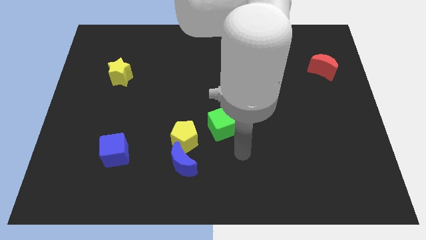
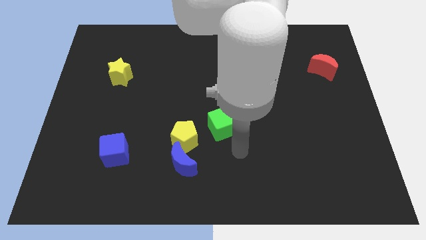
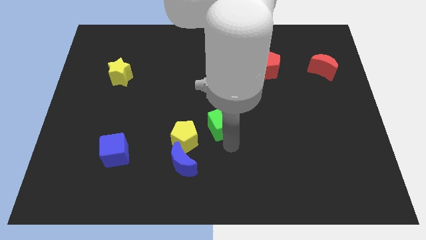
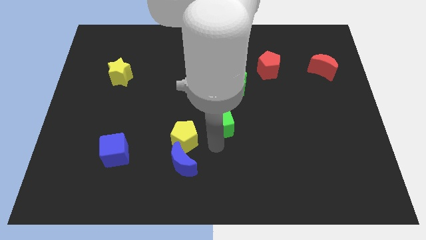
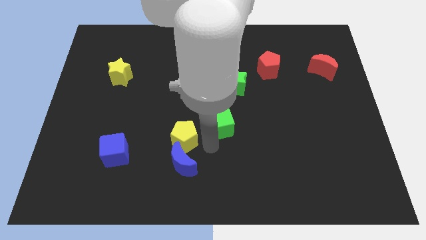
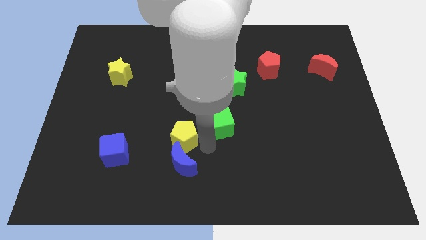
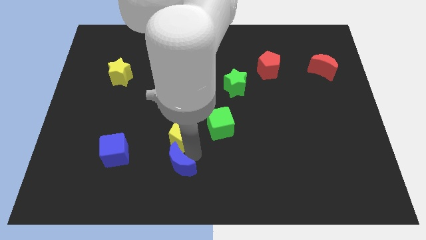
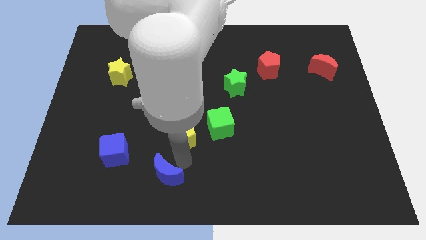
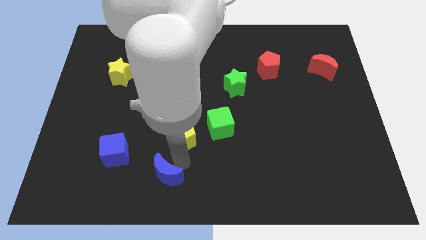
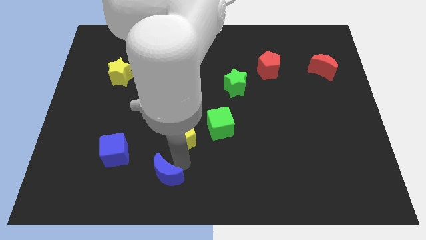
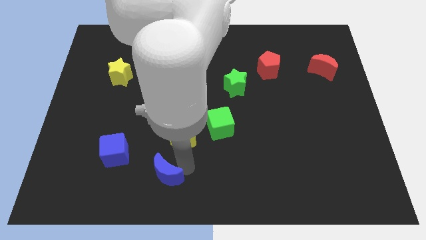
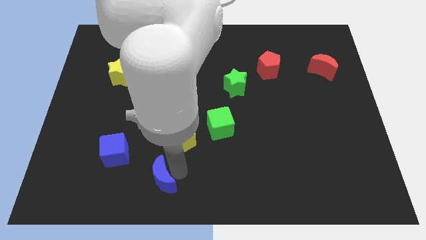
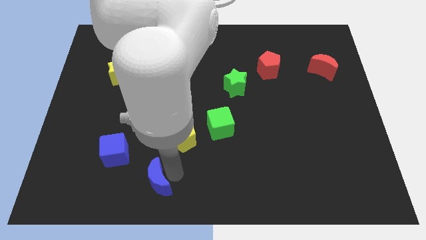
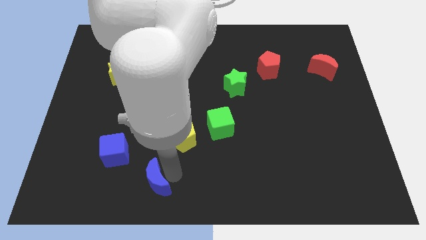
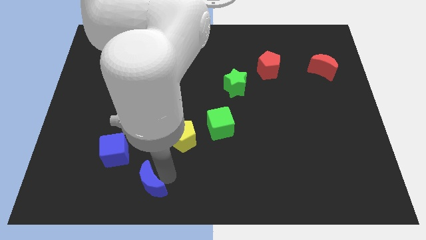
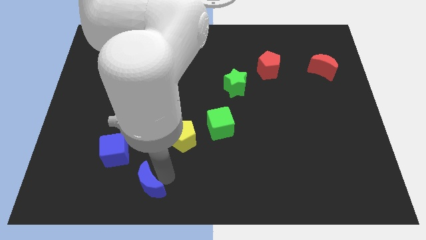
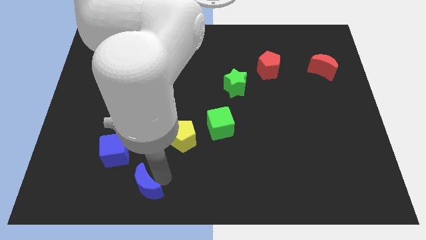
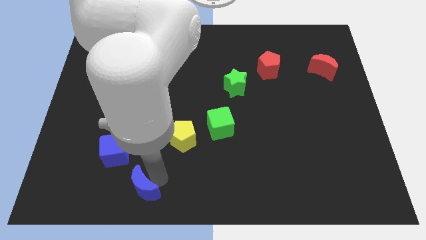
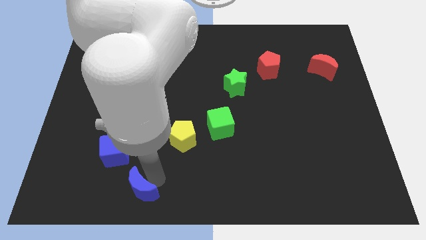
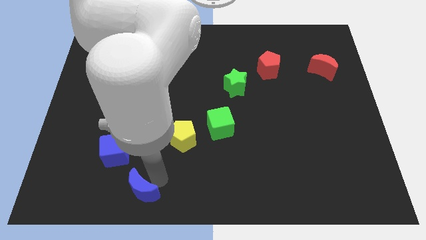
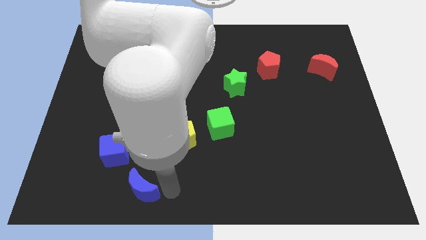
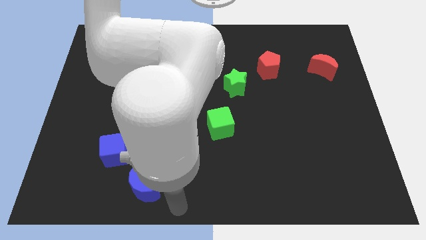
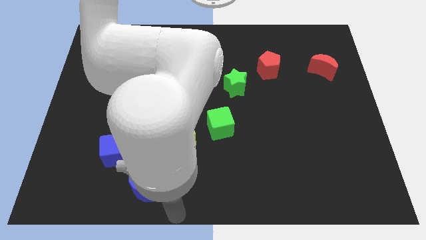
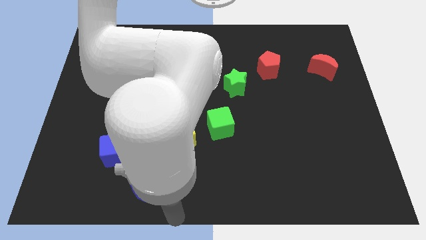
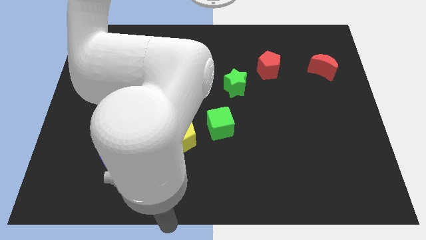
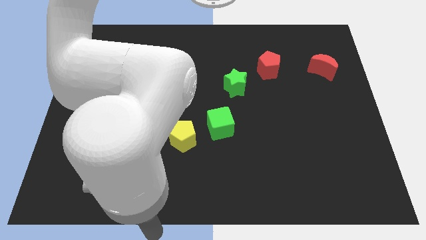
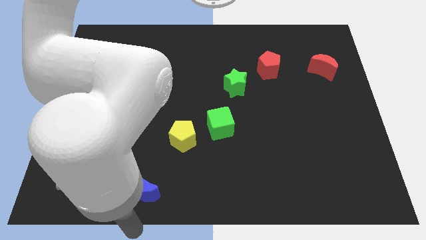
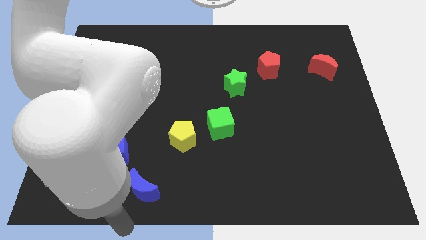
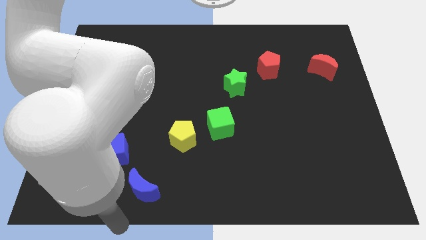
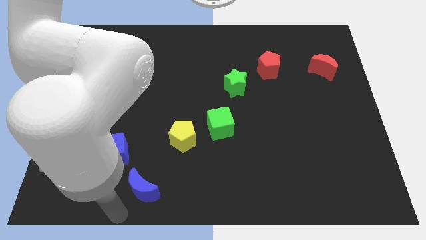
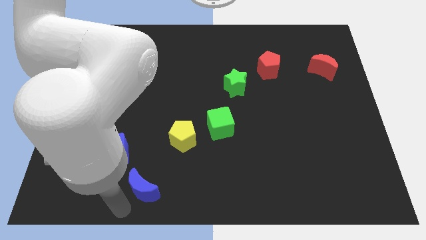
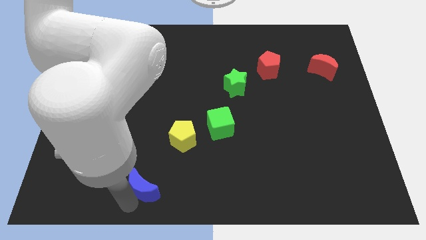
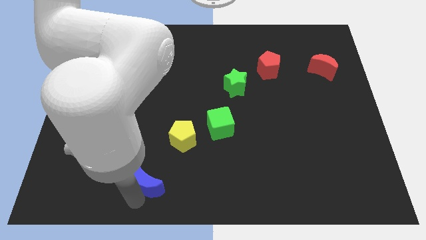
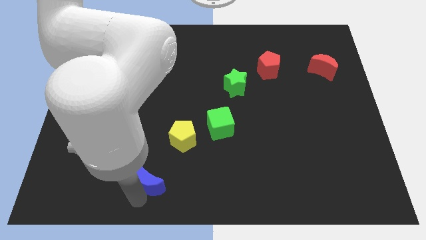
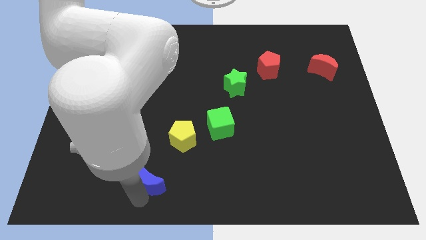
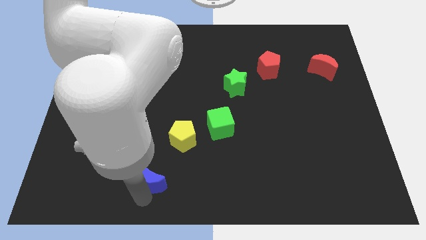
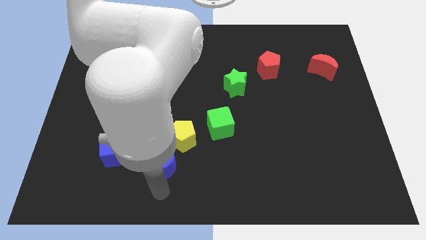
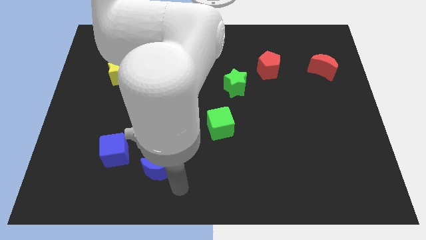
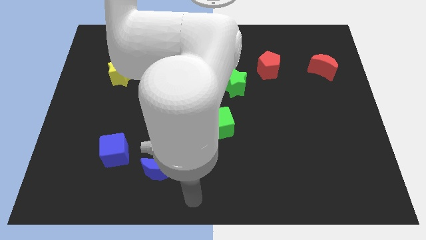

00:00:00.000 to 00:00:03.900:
move the blue crescent towards the bottom

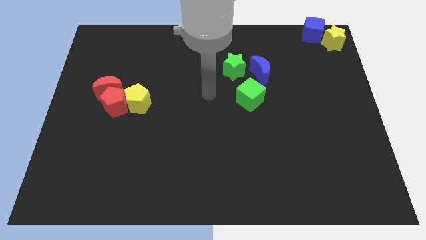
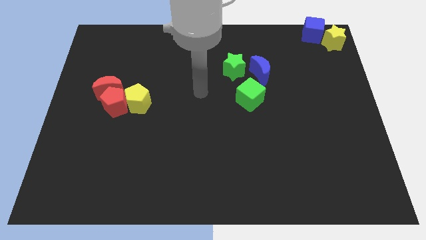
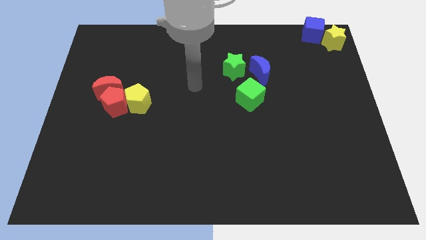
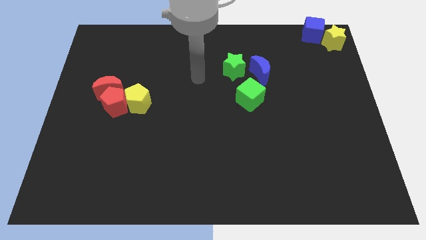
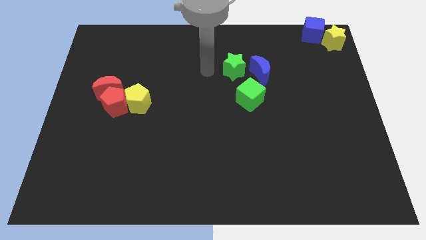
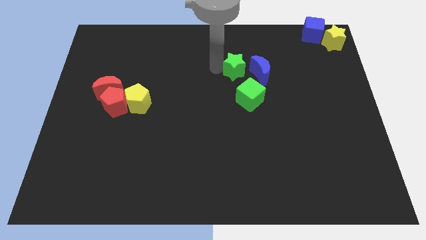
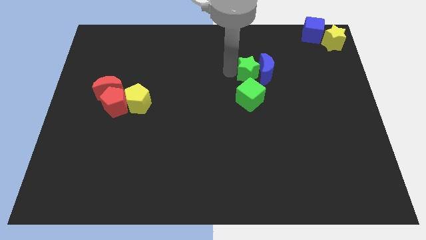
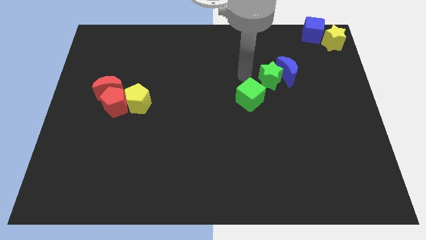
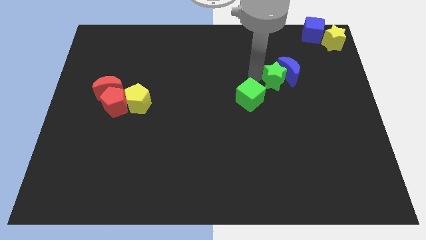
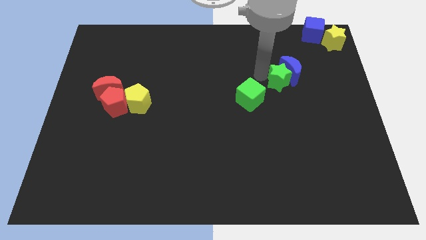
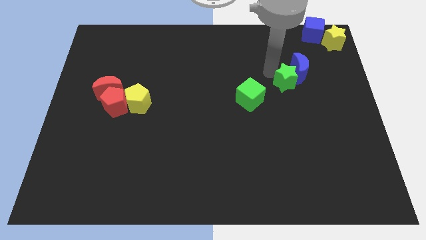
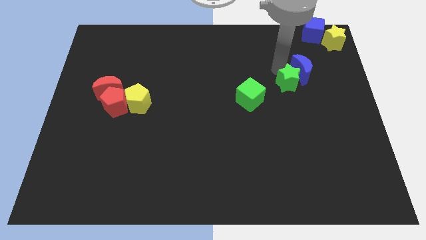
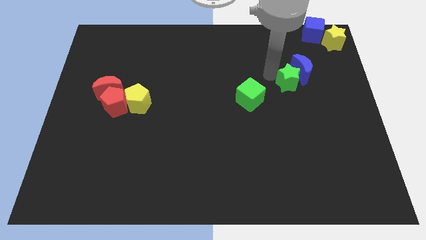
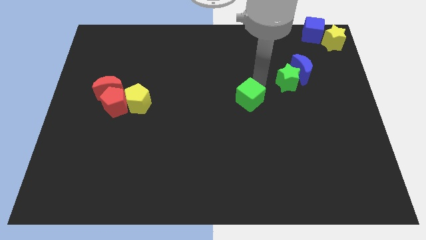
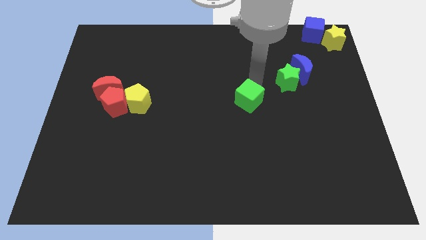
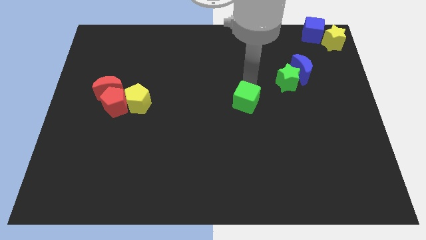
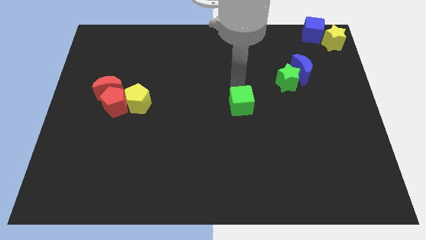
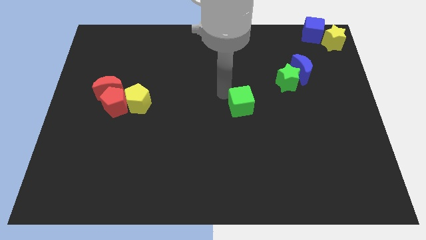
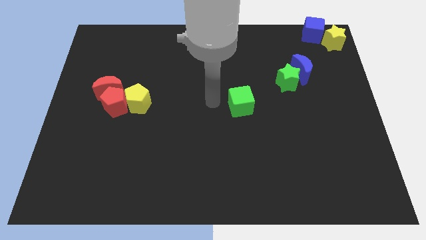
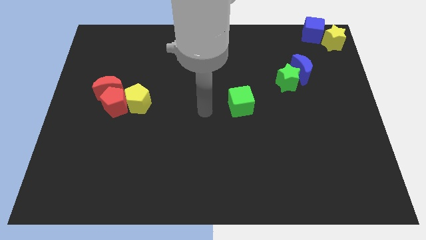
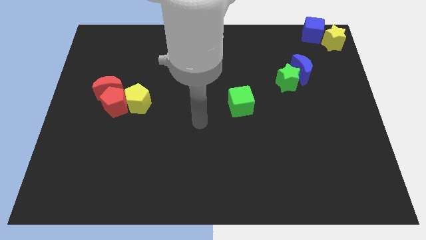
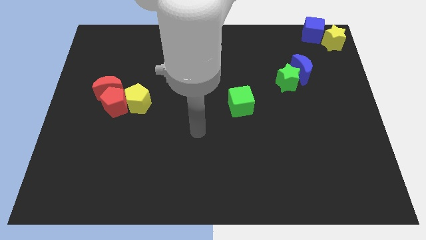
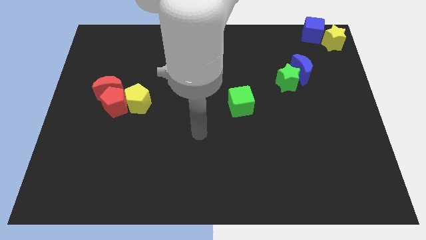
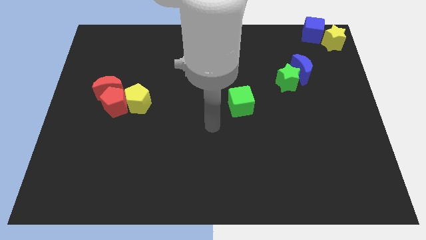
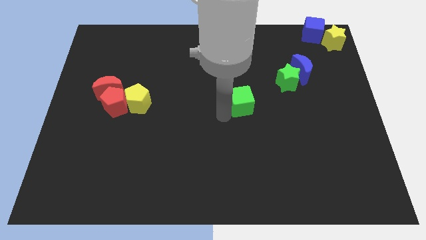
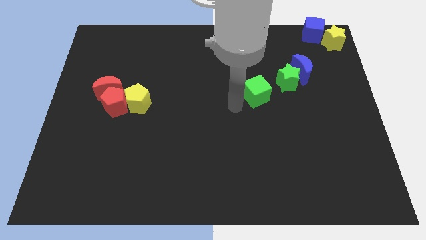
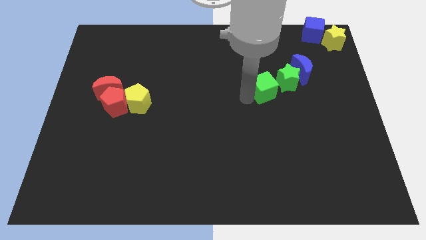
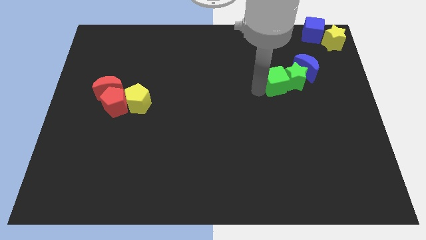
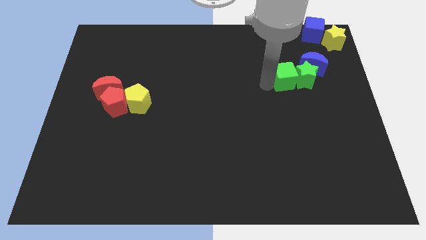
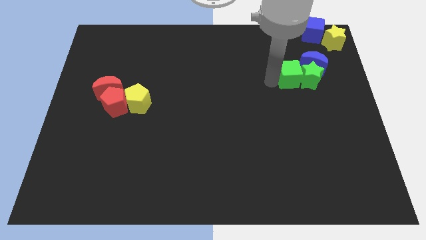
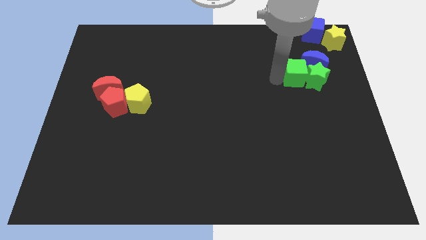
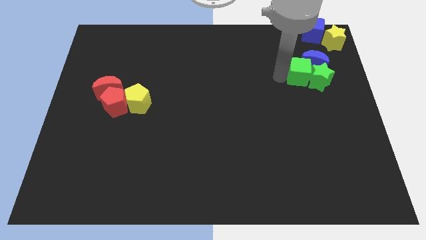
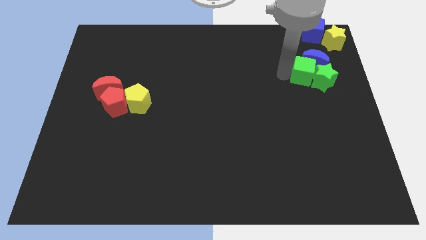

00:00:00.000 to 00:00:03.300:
push the green blocks and blue moon to the right side of the board

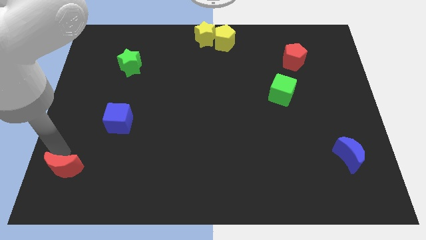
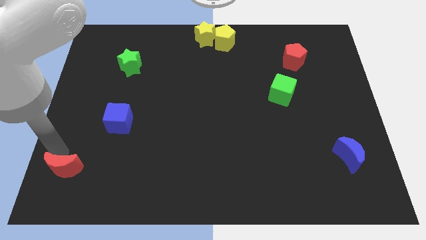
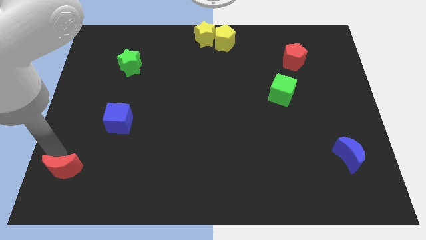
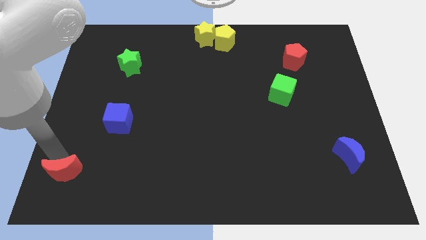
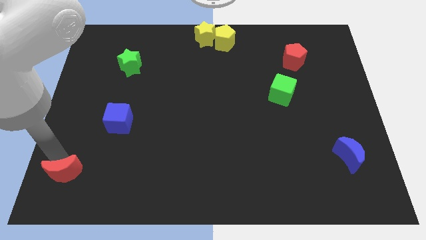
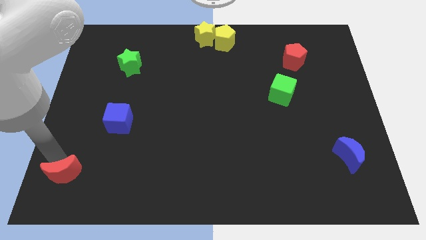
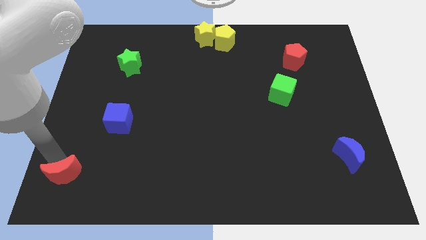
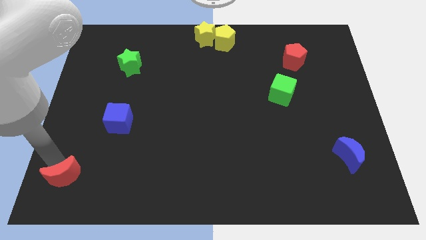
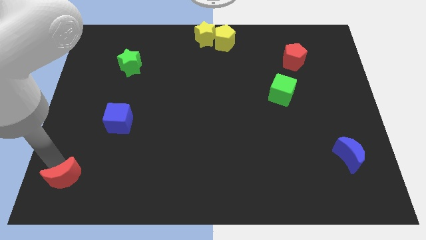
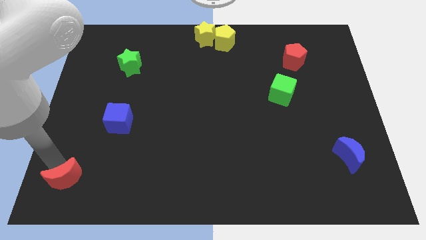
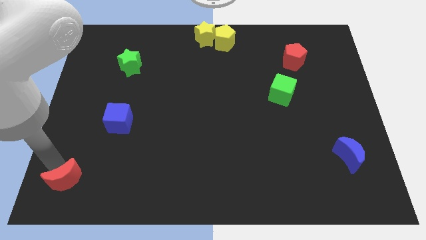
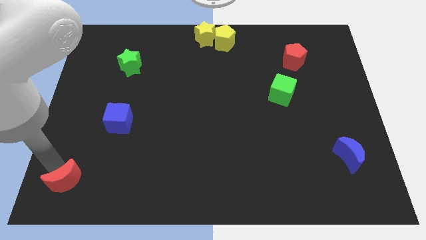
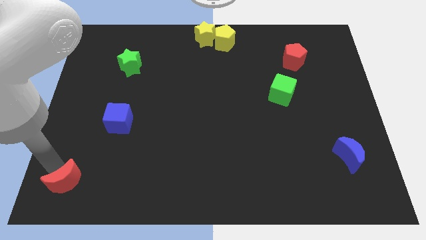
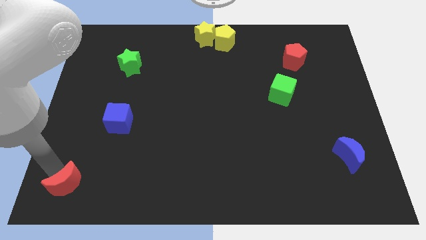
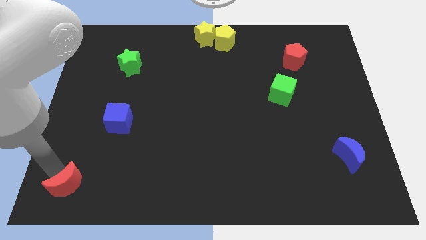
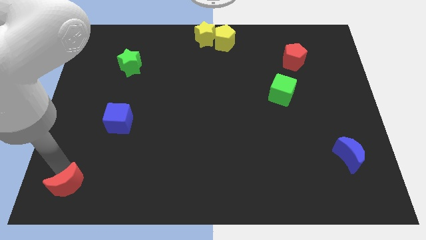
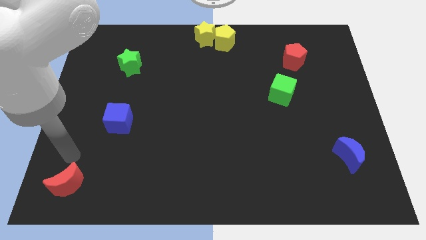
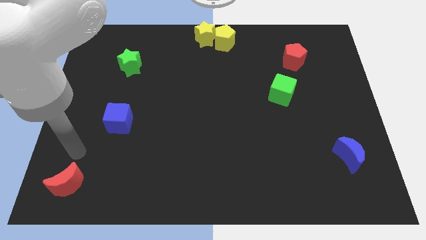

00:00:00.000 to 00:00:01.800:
push red crescent slightly to the down
